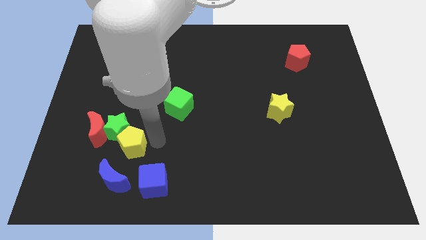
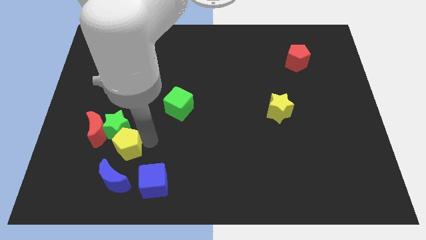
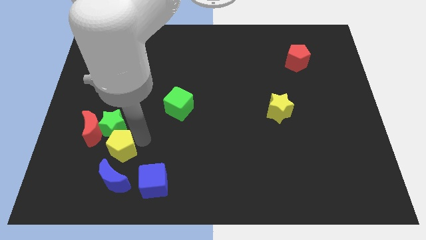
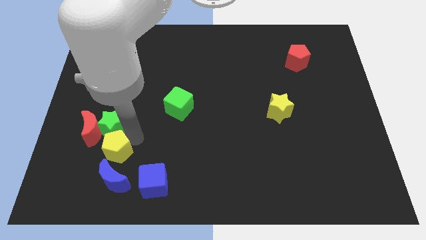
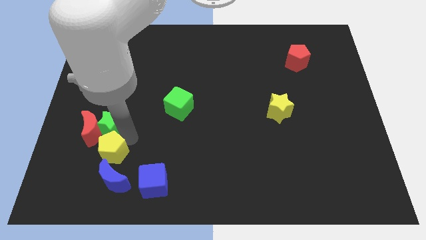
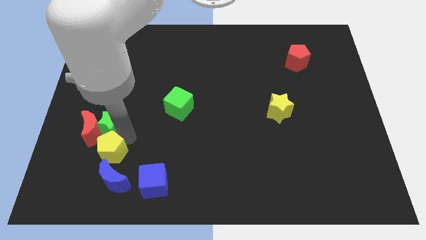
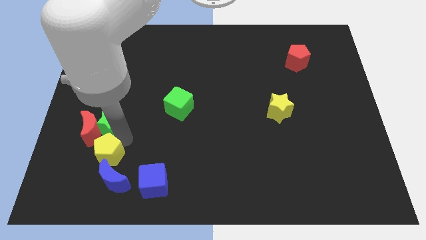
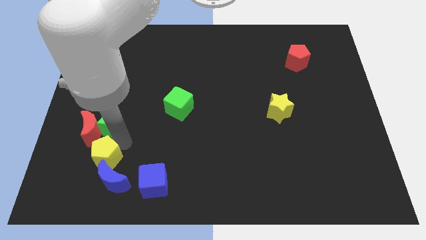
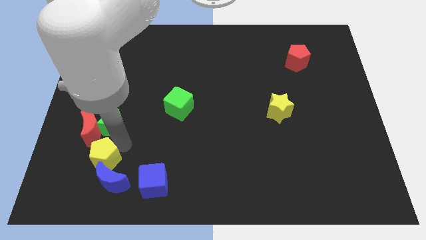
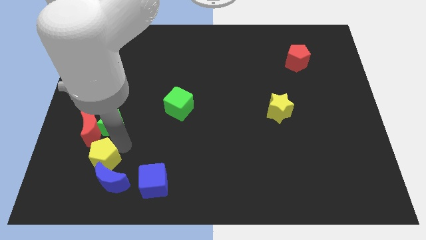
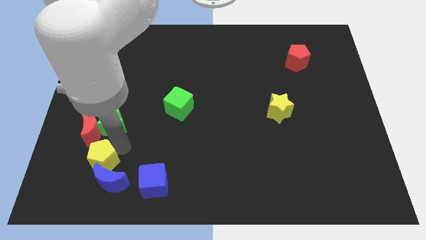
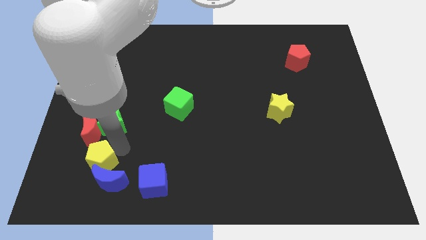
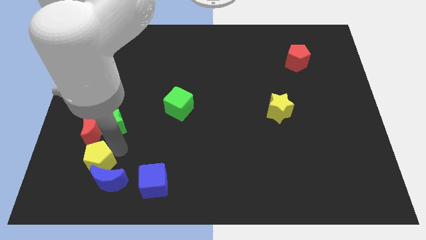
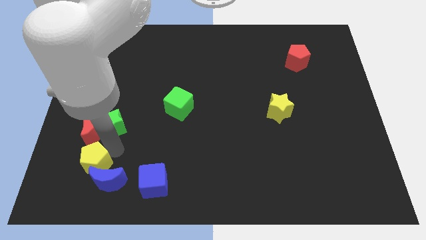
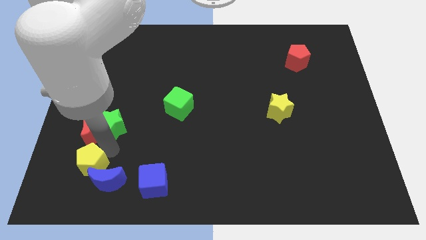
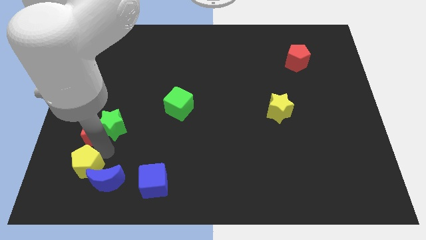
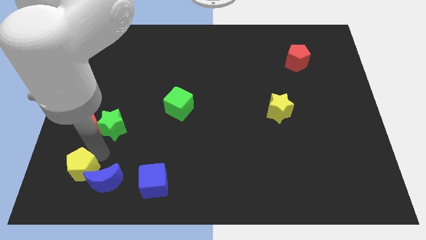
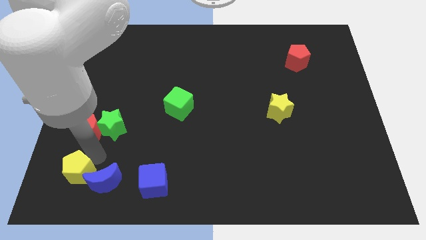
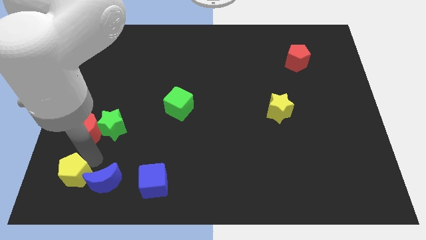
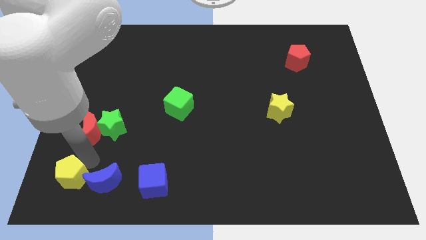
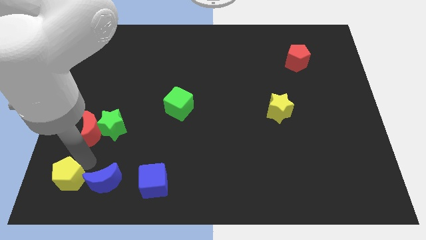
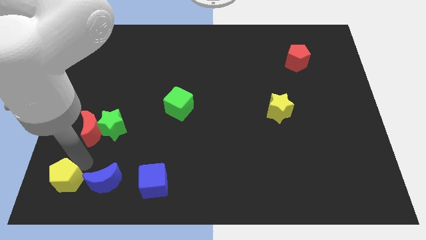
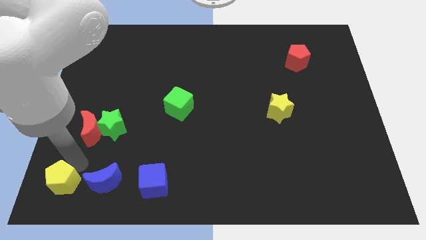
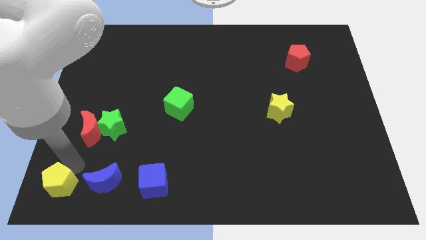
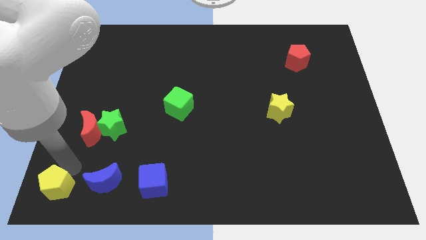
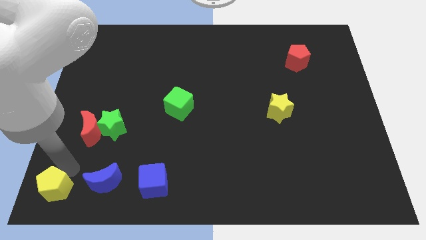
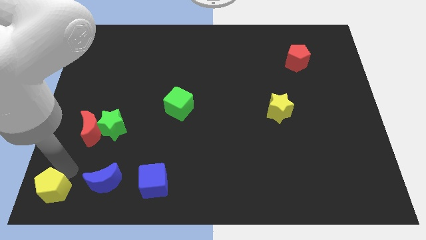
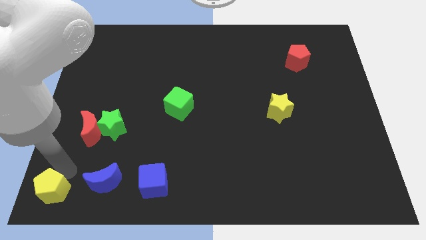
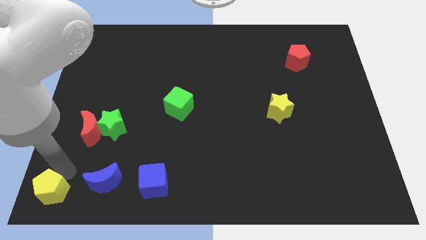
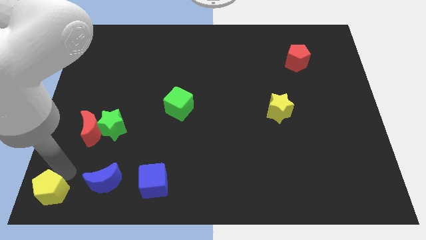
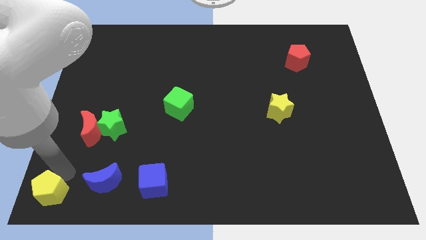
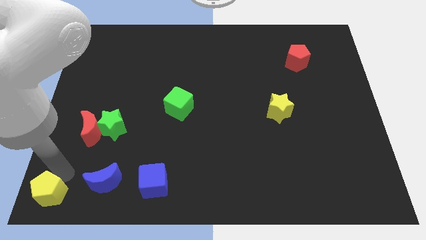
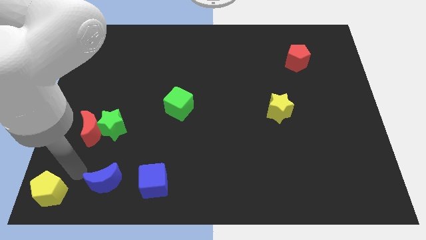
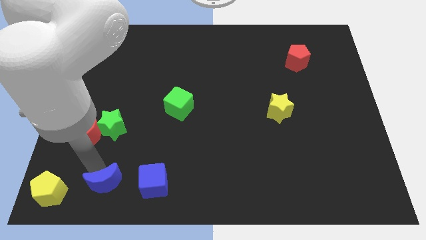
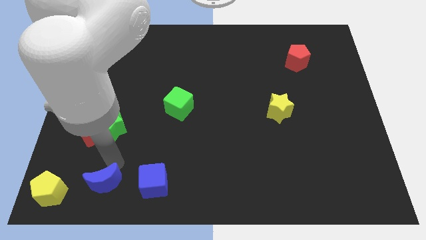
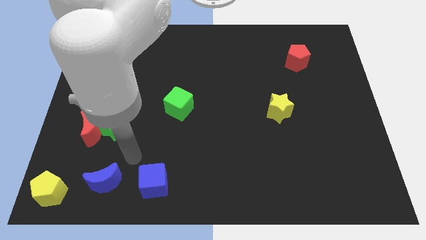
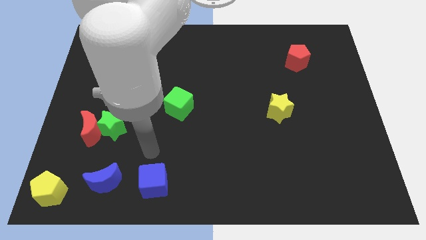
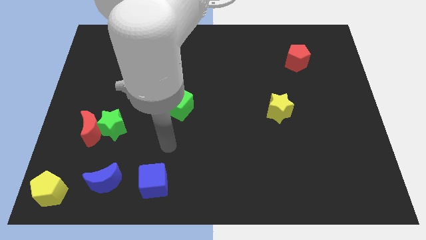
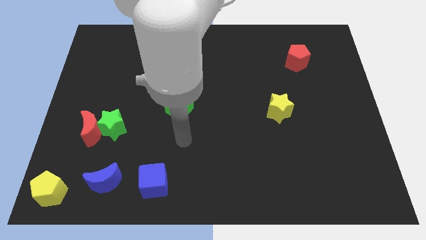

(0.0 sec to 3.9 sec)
place the yellow pentagon to bottom left corner of the board

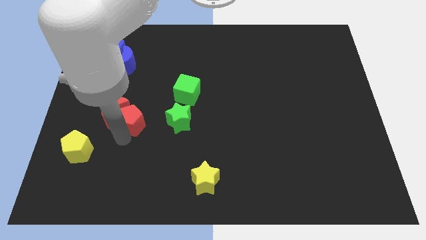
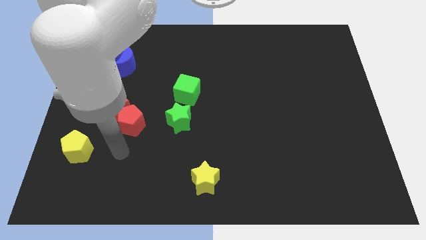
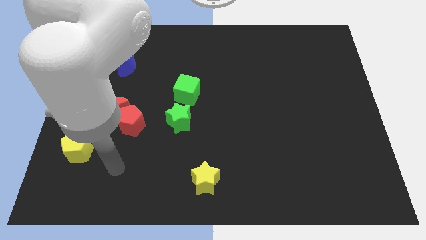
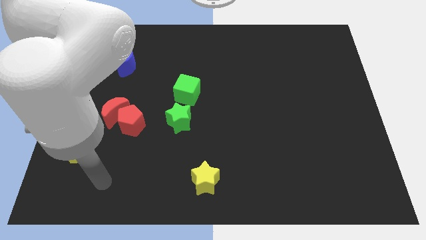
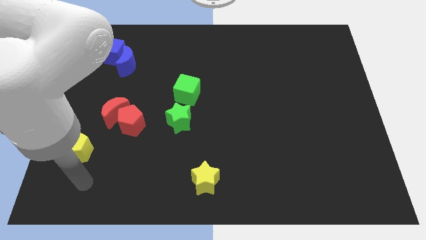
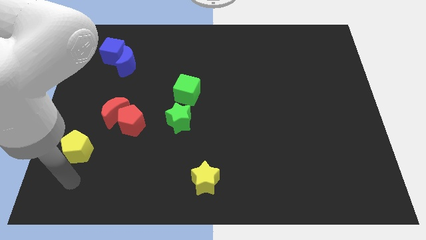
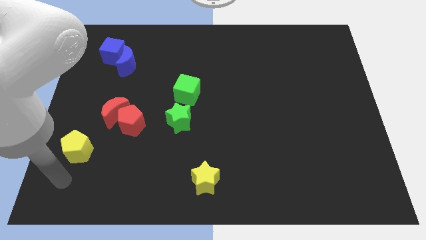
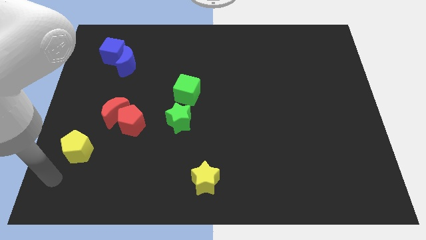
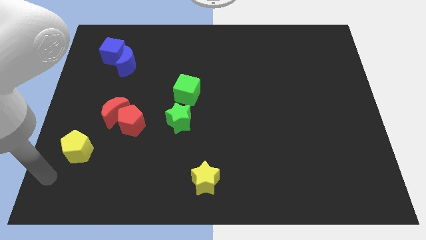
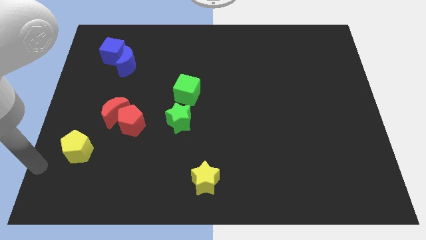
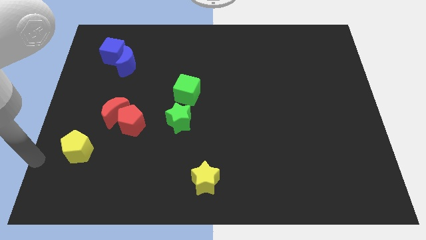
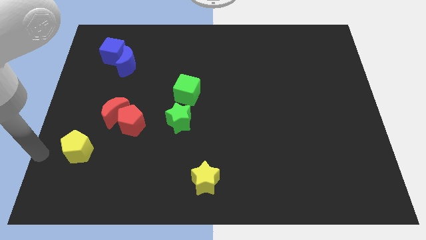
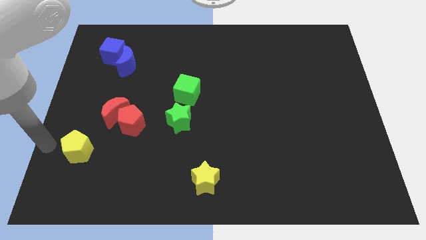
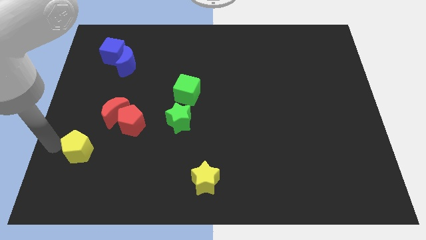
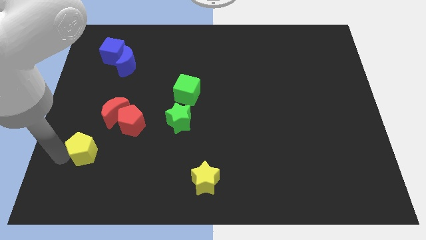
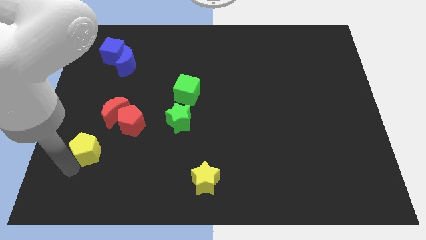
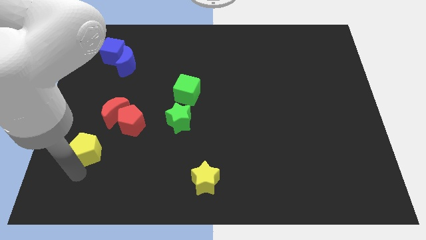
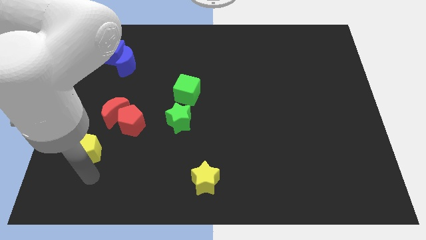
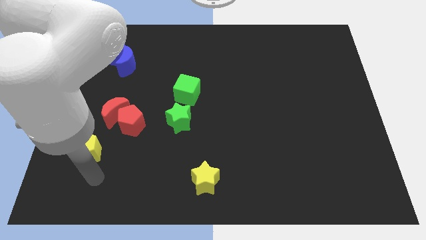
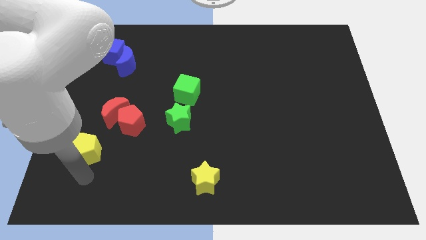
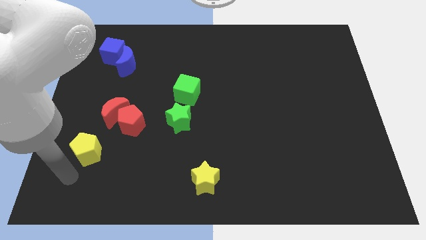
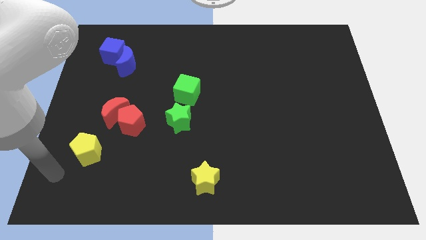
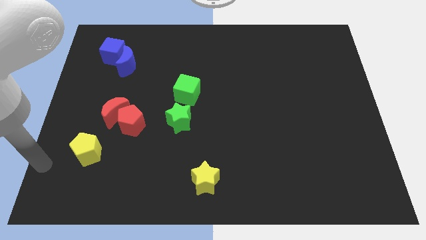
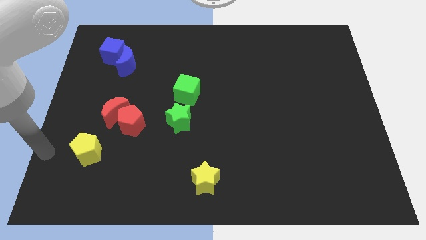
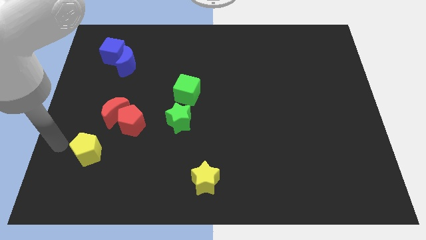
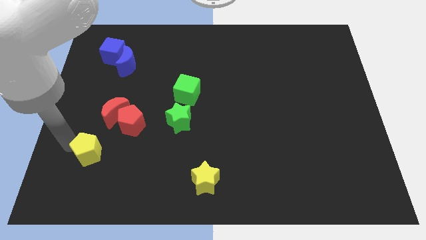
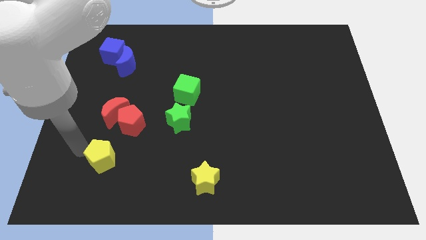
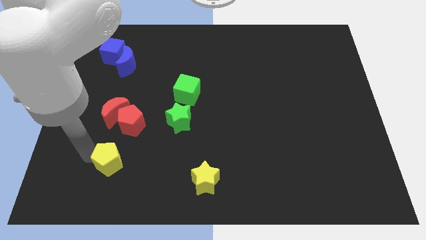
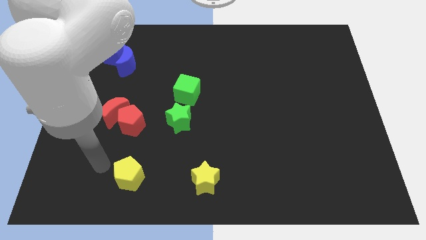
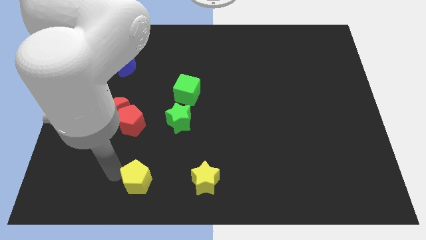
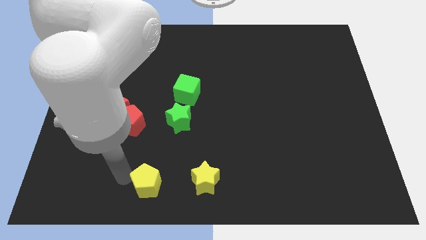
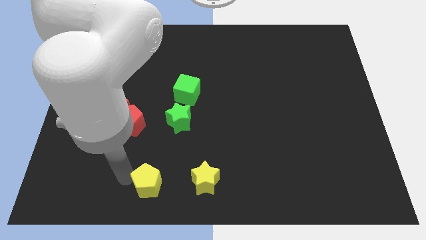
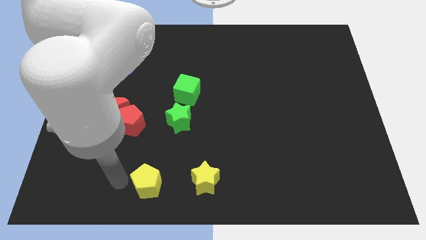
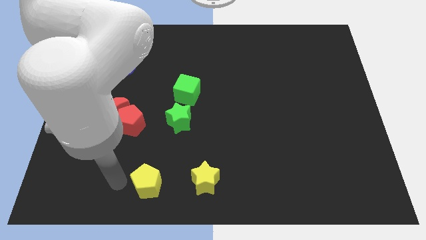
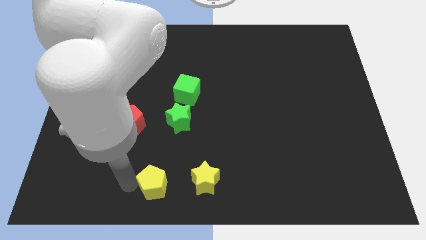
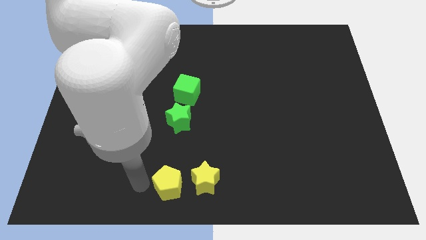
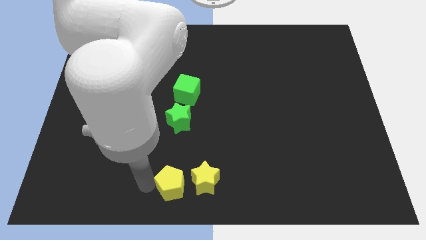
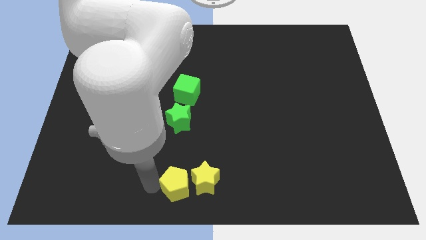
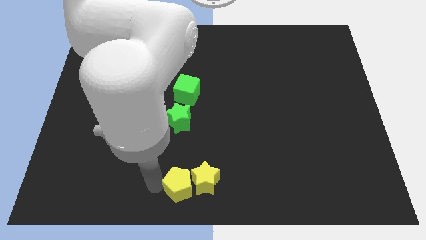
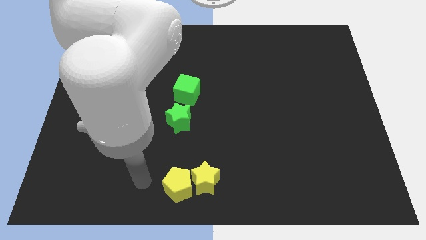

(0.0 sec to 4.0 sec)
place yellow pentagon left of yellow star

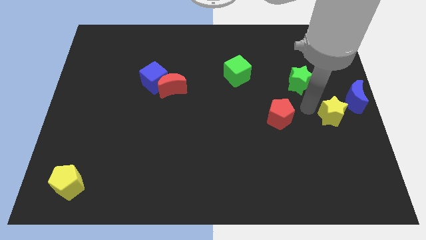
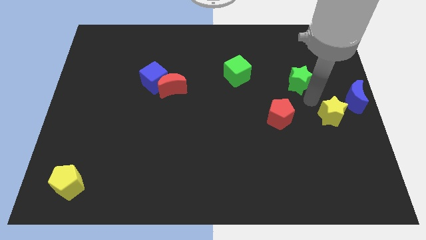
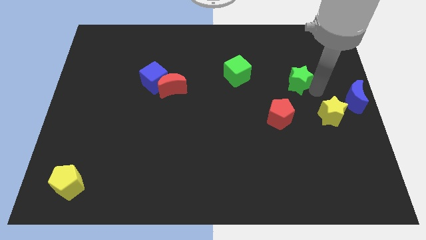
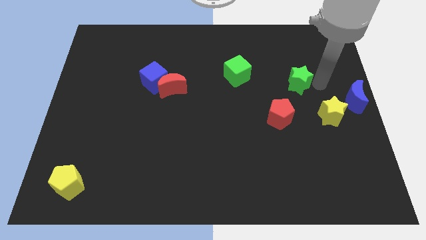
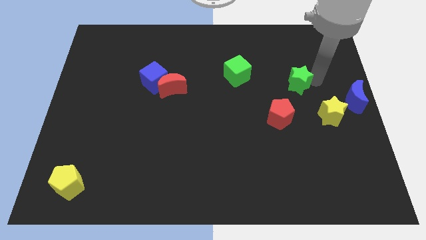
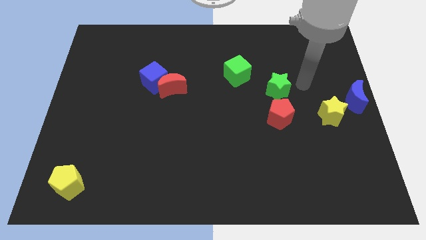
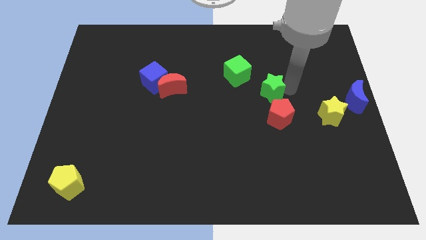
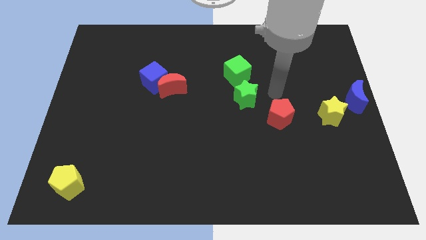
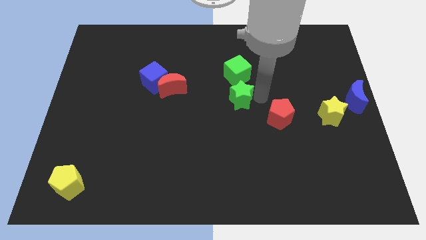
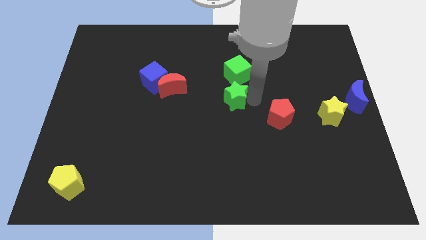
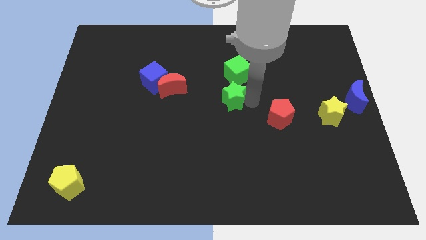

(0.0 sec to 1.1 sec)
move the green star parallel to the blue crescent
